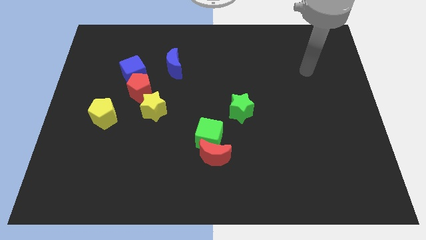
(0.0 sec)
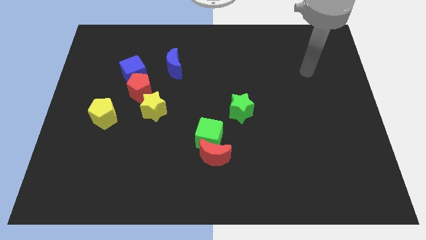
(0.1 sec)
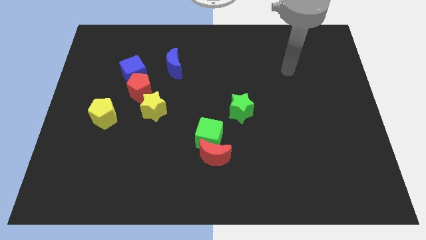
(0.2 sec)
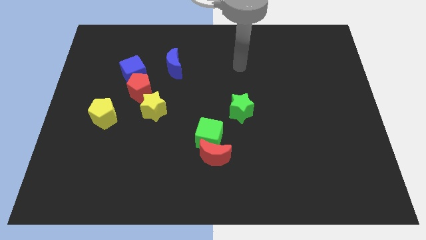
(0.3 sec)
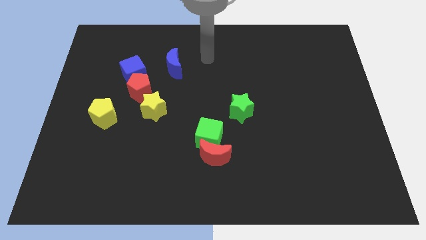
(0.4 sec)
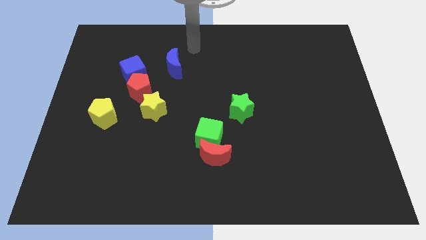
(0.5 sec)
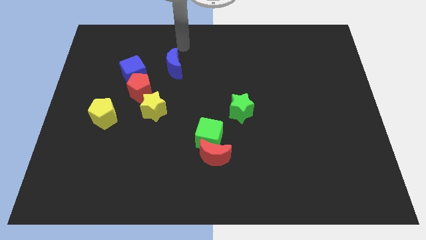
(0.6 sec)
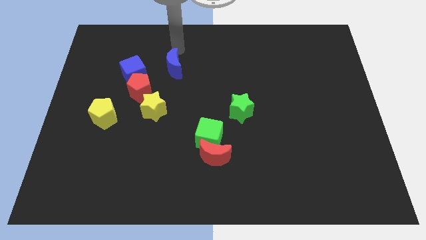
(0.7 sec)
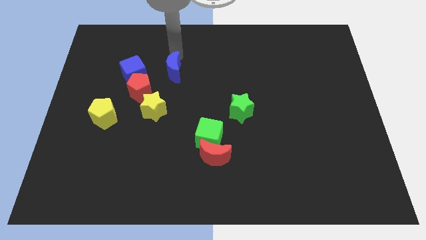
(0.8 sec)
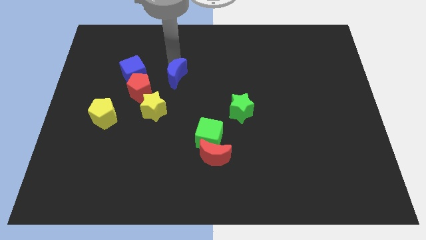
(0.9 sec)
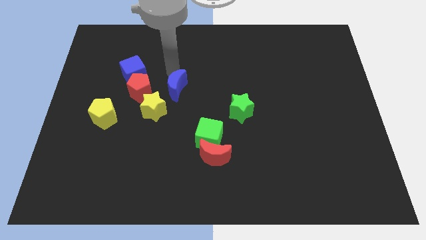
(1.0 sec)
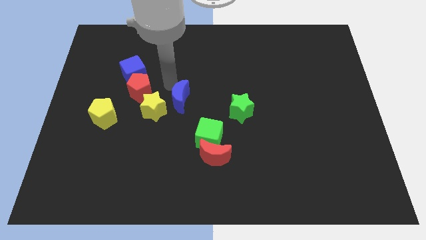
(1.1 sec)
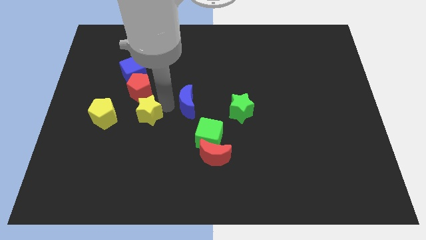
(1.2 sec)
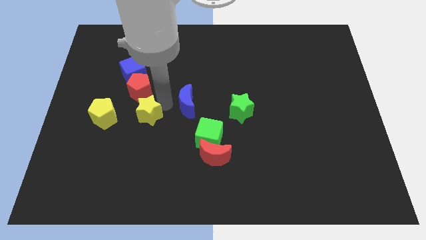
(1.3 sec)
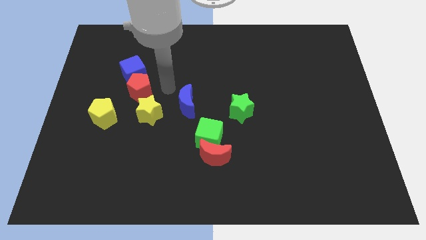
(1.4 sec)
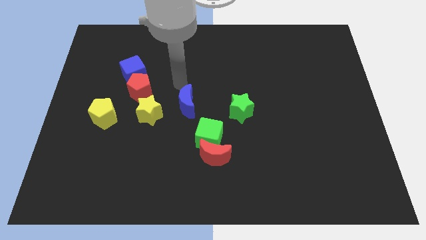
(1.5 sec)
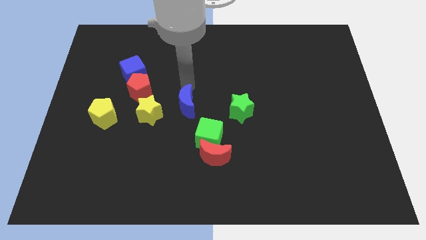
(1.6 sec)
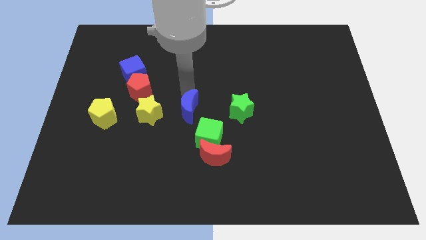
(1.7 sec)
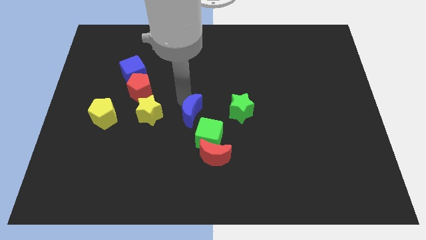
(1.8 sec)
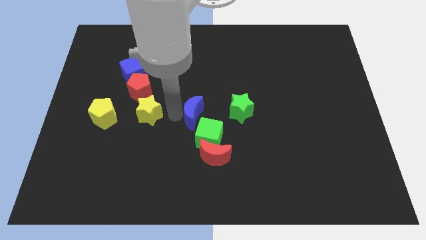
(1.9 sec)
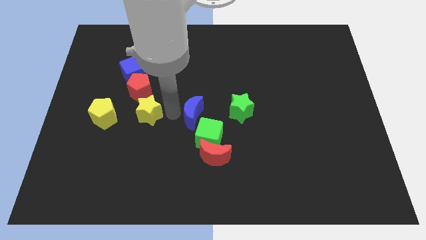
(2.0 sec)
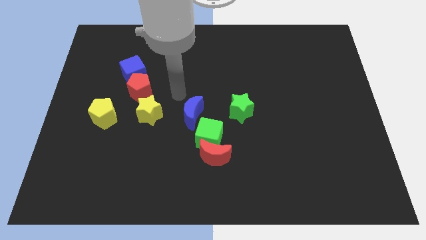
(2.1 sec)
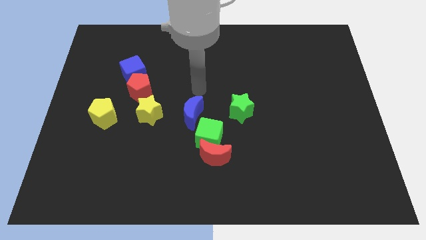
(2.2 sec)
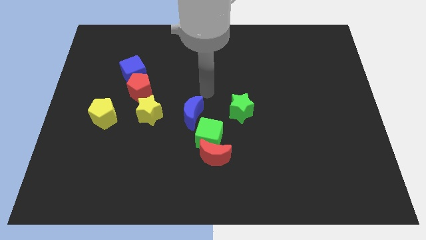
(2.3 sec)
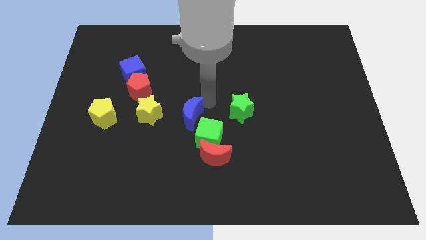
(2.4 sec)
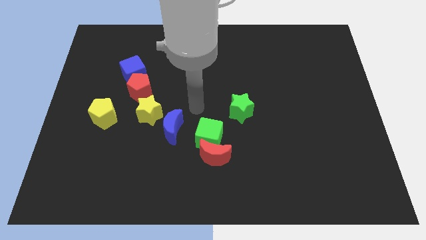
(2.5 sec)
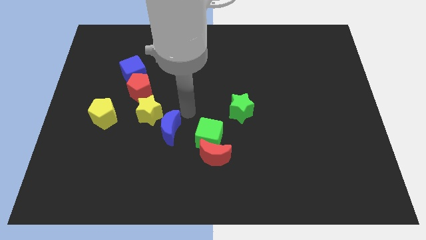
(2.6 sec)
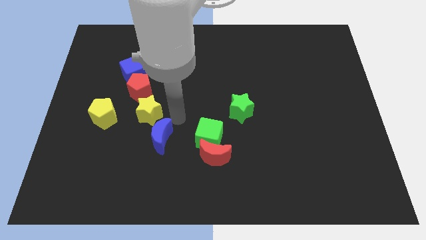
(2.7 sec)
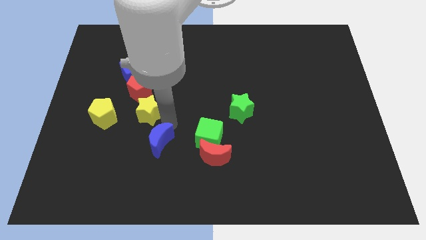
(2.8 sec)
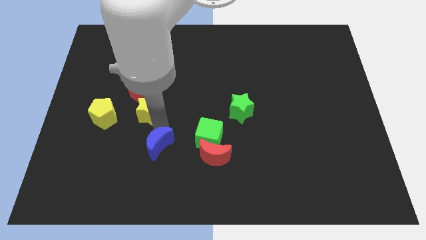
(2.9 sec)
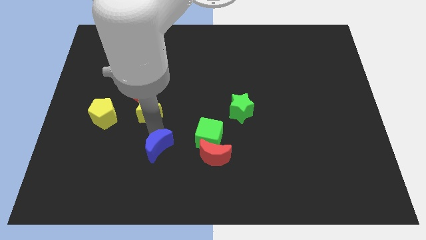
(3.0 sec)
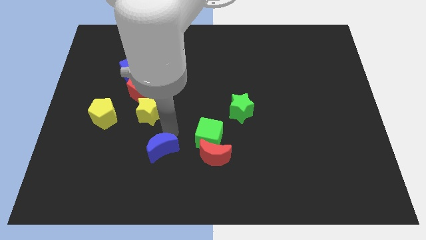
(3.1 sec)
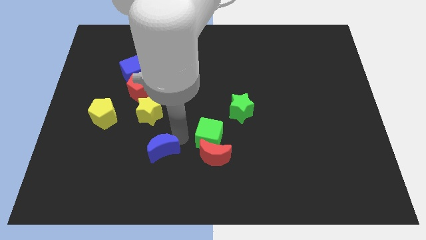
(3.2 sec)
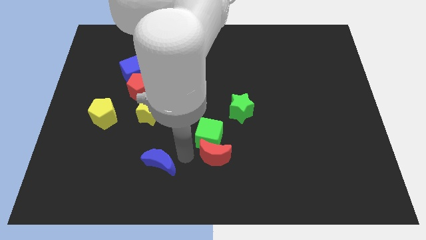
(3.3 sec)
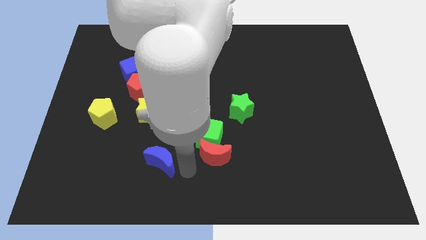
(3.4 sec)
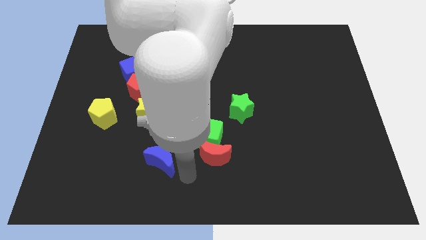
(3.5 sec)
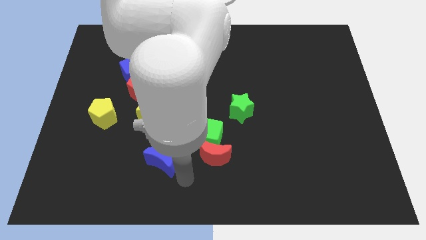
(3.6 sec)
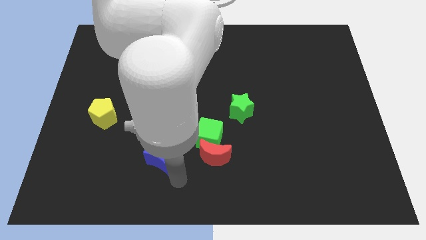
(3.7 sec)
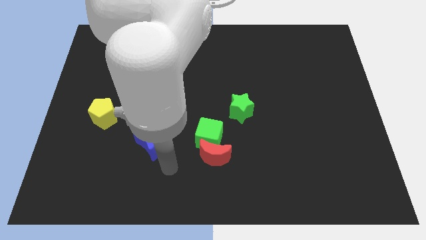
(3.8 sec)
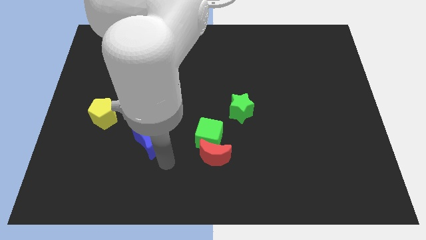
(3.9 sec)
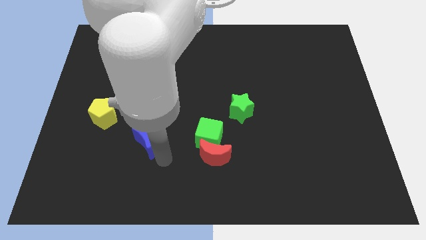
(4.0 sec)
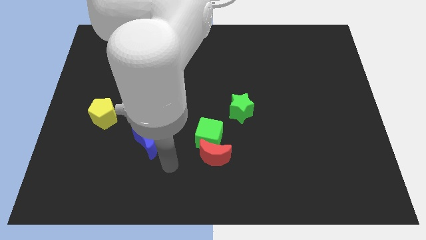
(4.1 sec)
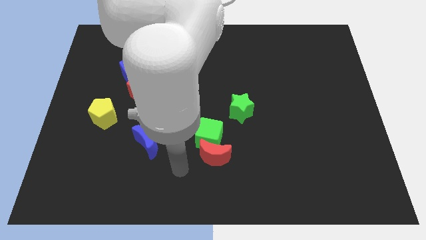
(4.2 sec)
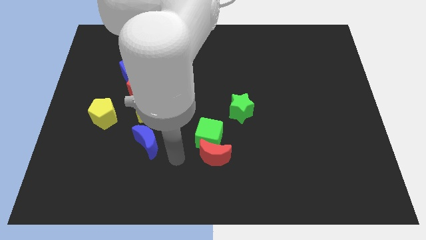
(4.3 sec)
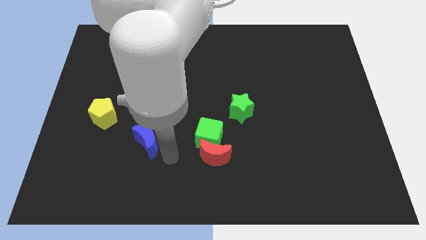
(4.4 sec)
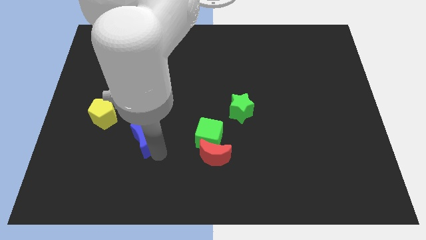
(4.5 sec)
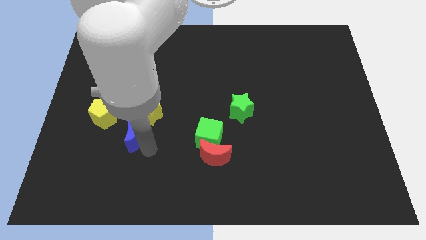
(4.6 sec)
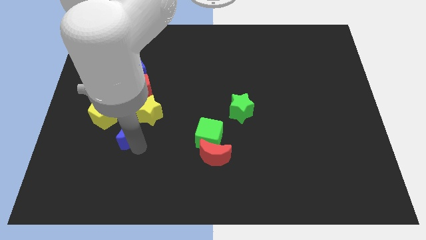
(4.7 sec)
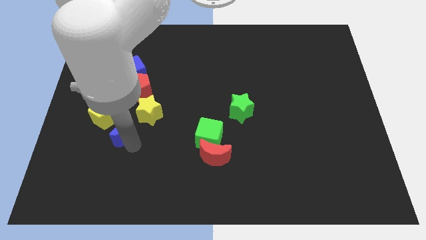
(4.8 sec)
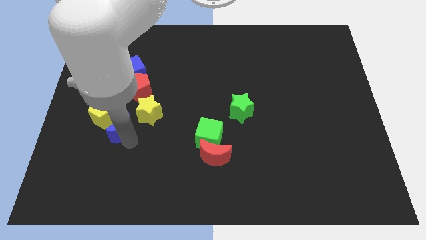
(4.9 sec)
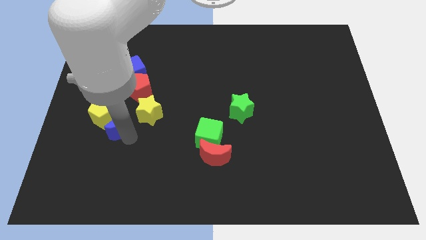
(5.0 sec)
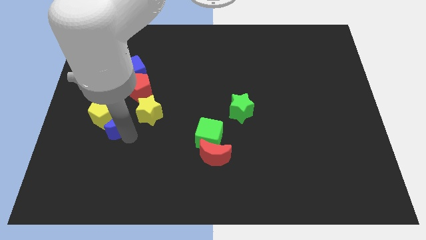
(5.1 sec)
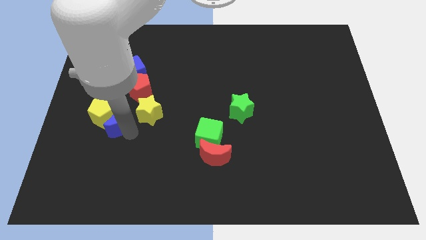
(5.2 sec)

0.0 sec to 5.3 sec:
put the blue moon next to the yellow pentagon

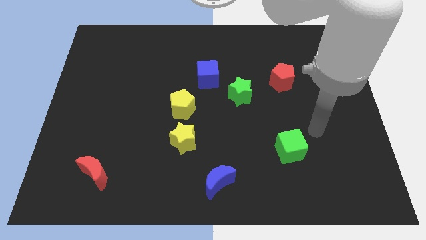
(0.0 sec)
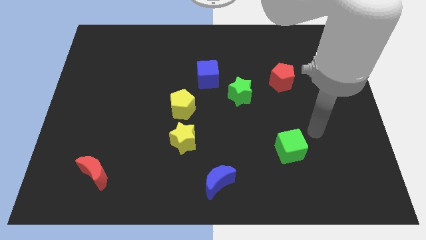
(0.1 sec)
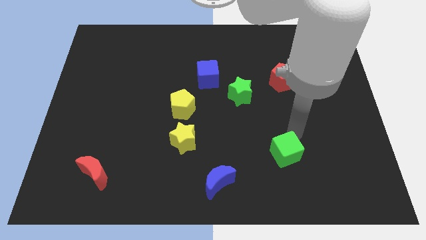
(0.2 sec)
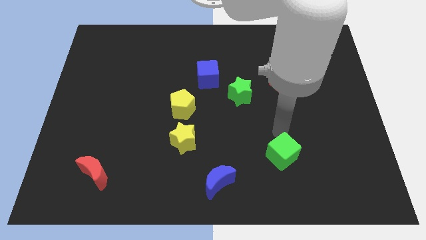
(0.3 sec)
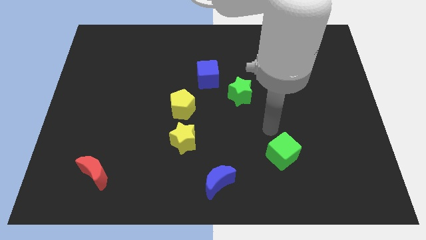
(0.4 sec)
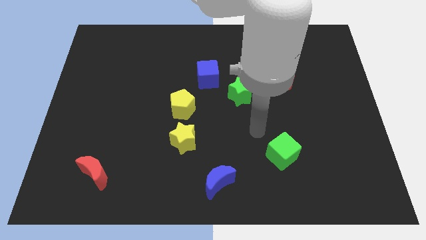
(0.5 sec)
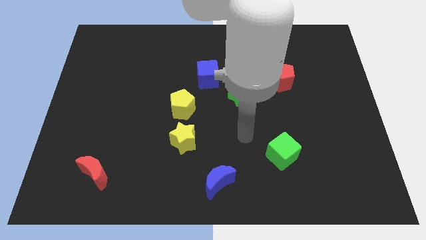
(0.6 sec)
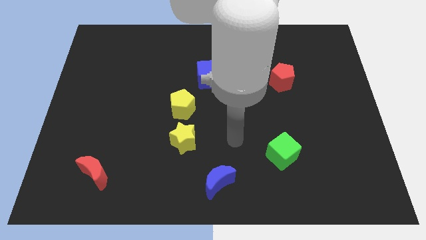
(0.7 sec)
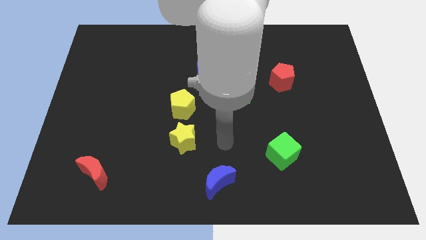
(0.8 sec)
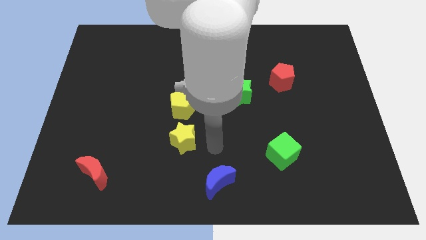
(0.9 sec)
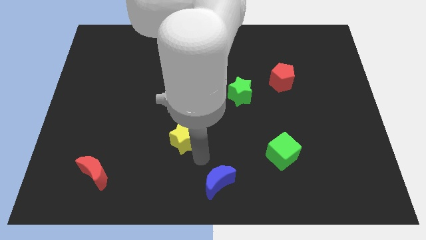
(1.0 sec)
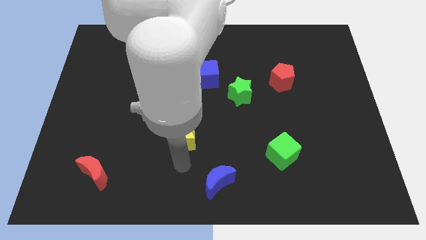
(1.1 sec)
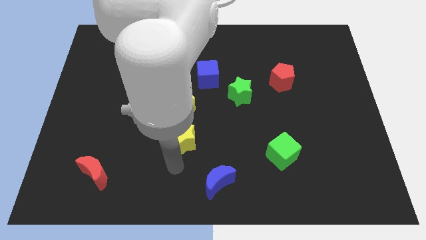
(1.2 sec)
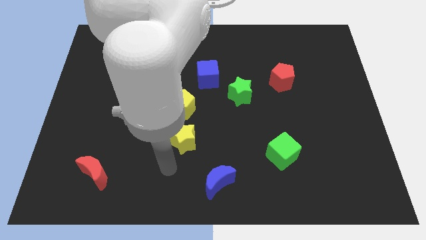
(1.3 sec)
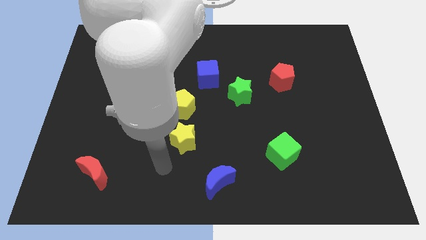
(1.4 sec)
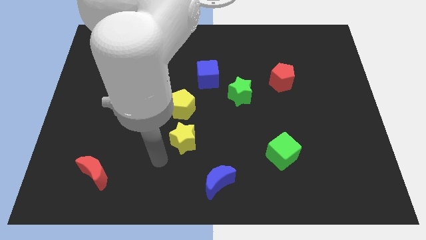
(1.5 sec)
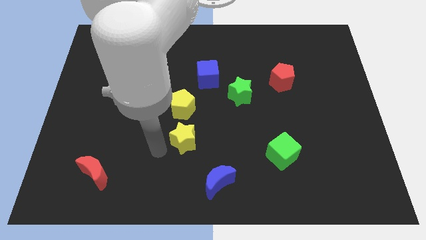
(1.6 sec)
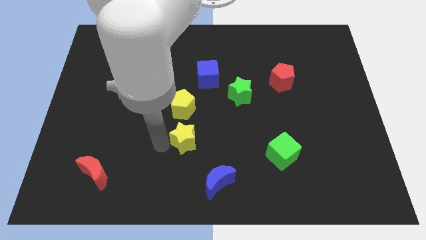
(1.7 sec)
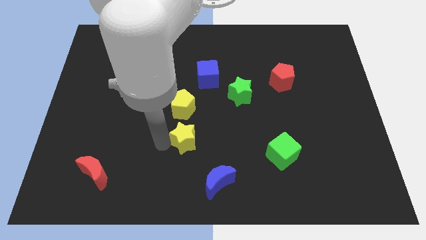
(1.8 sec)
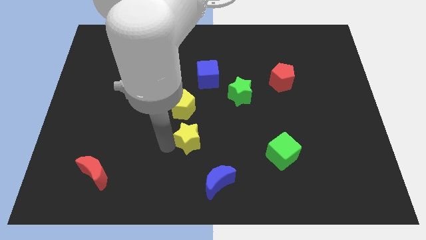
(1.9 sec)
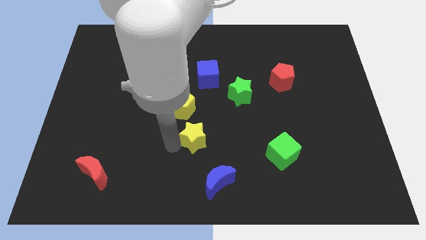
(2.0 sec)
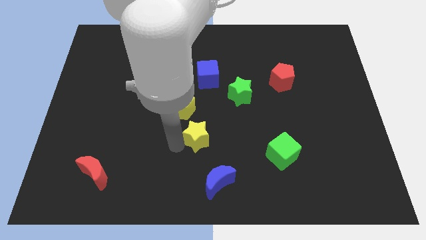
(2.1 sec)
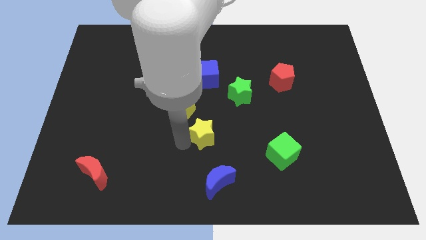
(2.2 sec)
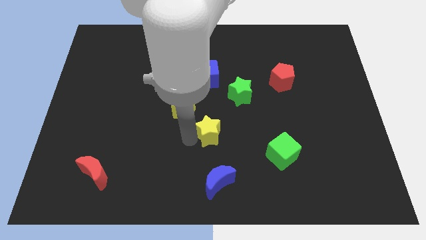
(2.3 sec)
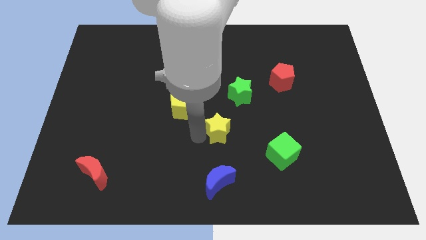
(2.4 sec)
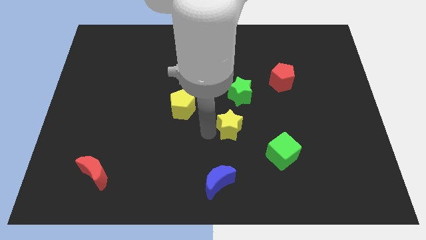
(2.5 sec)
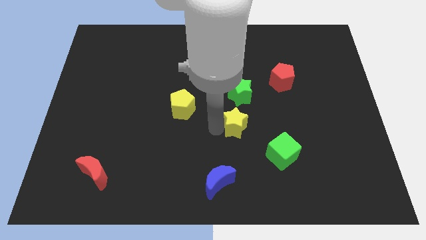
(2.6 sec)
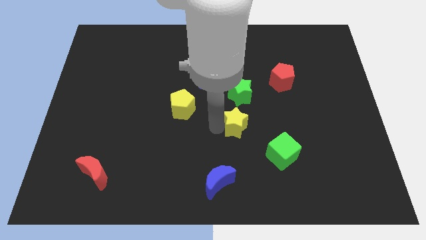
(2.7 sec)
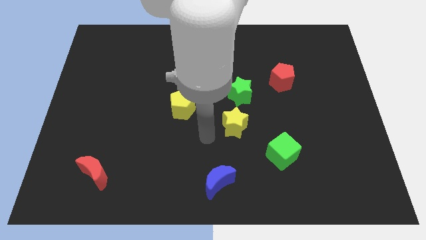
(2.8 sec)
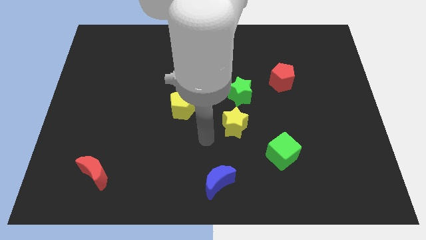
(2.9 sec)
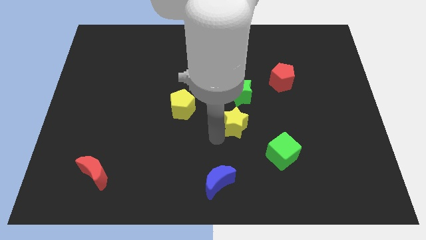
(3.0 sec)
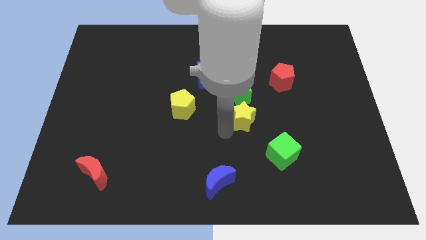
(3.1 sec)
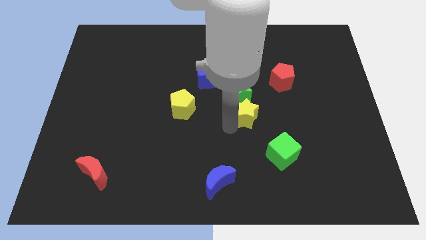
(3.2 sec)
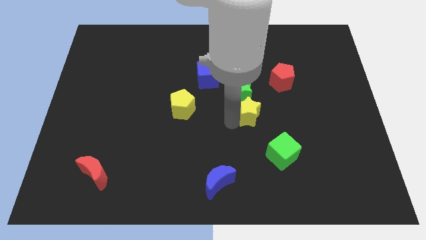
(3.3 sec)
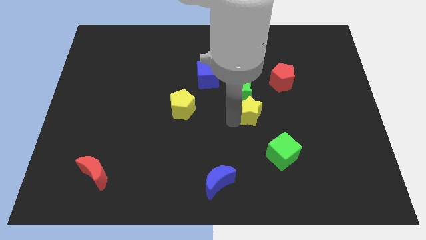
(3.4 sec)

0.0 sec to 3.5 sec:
move the yellow star to the green star
